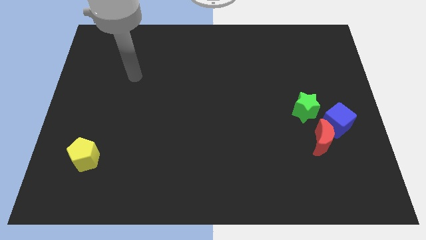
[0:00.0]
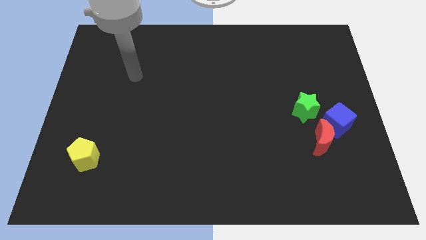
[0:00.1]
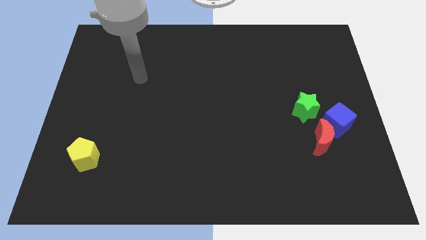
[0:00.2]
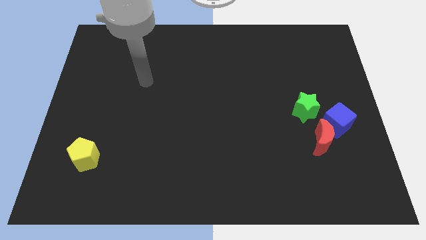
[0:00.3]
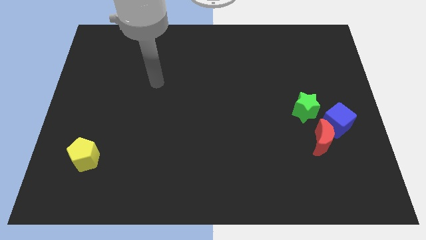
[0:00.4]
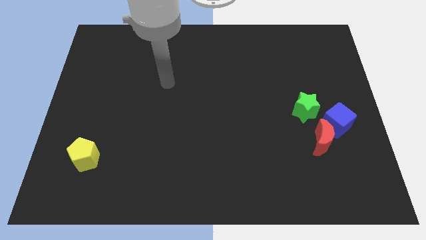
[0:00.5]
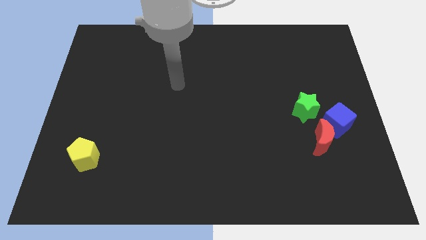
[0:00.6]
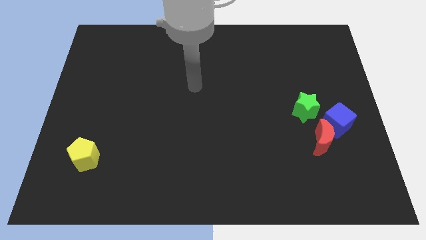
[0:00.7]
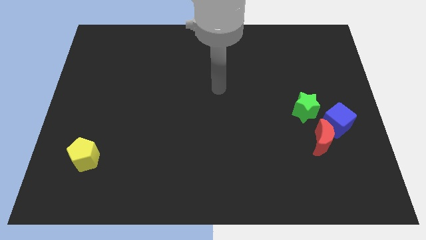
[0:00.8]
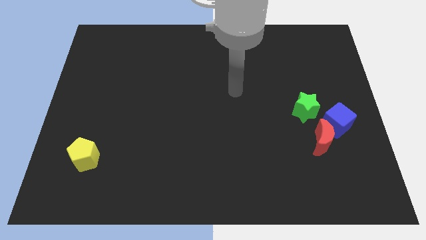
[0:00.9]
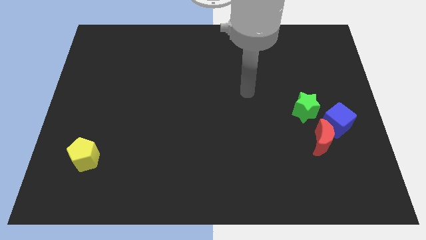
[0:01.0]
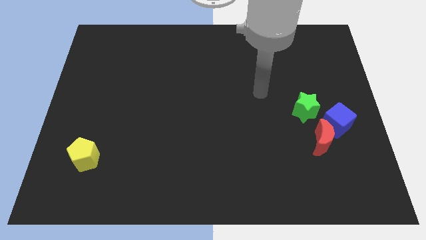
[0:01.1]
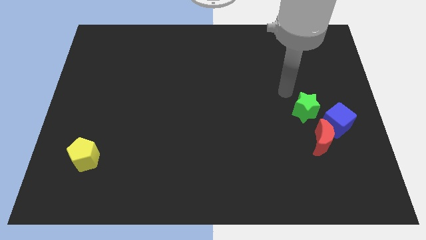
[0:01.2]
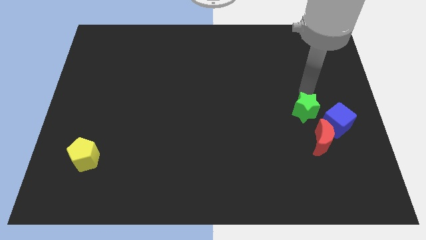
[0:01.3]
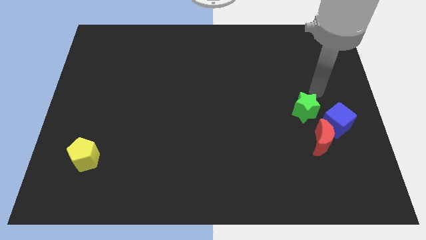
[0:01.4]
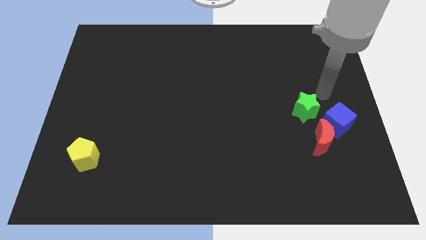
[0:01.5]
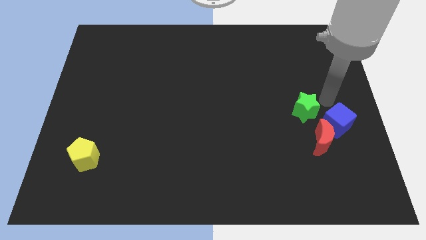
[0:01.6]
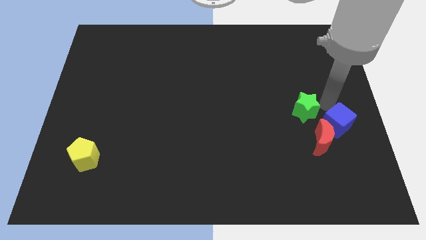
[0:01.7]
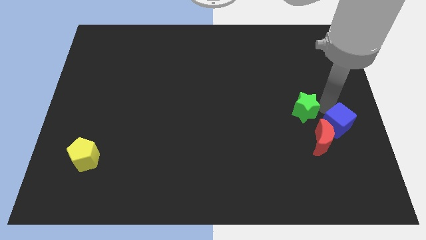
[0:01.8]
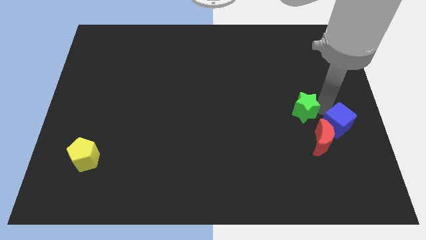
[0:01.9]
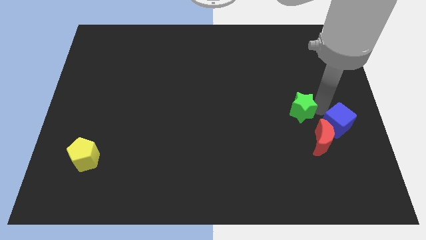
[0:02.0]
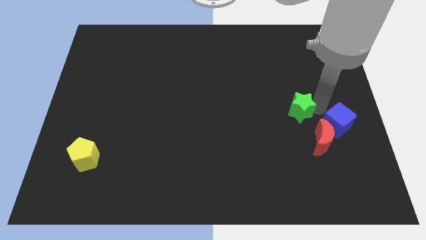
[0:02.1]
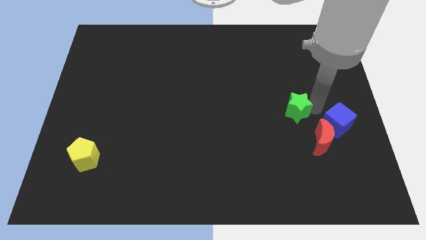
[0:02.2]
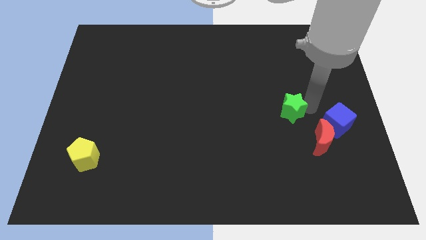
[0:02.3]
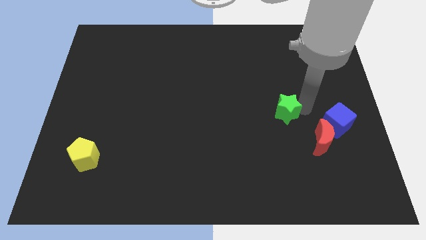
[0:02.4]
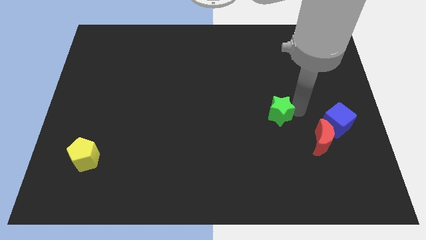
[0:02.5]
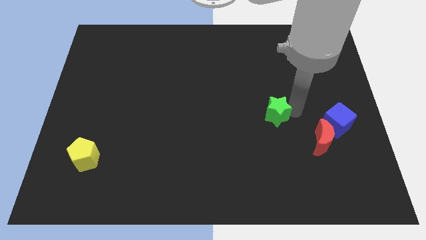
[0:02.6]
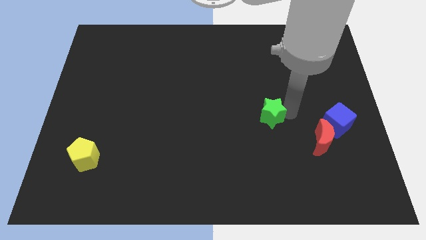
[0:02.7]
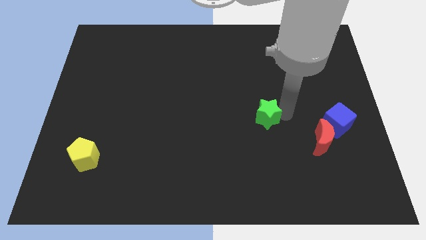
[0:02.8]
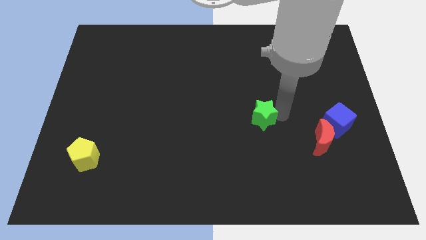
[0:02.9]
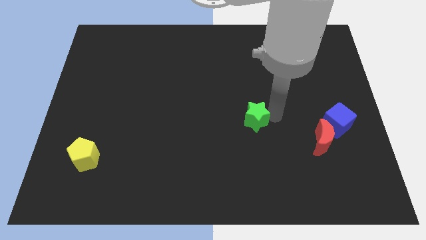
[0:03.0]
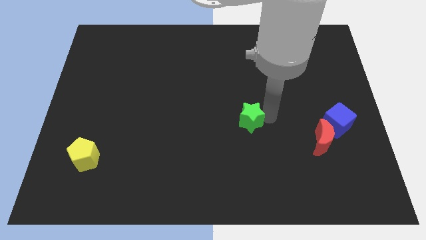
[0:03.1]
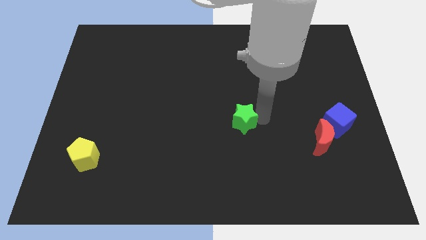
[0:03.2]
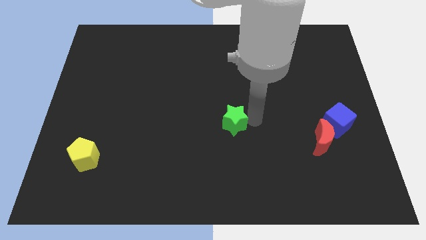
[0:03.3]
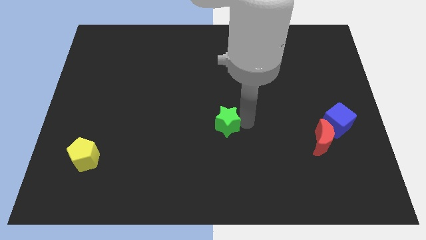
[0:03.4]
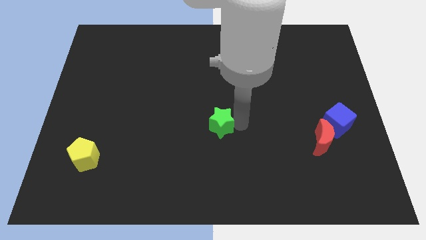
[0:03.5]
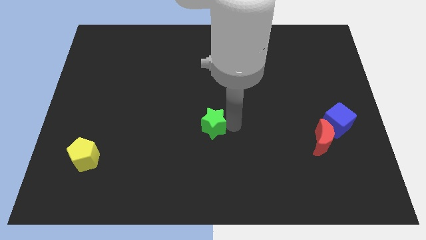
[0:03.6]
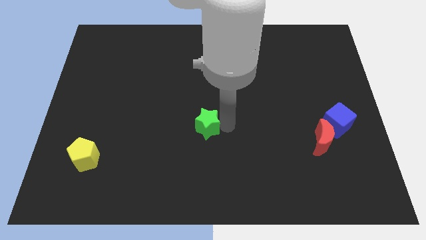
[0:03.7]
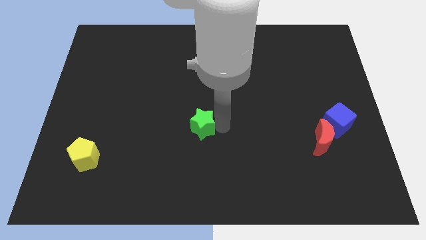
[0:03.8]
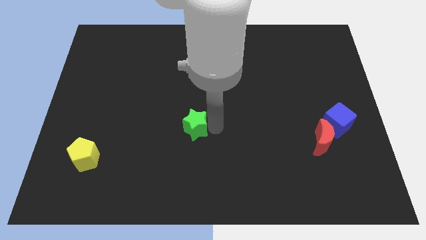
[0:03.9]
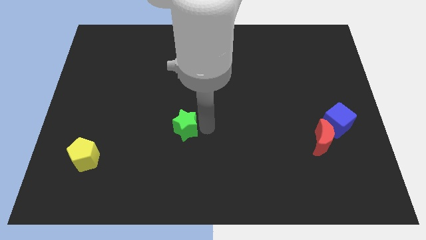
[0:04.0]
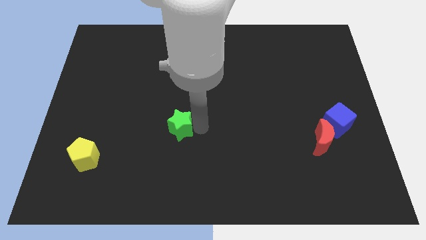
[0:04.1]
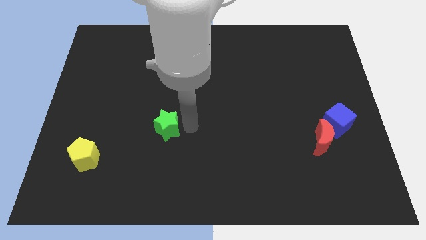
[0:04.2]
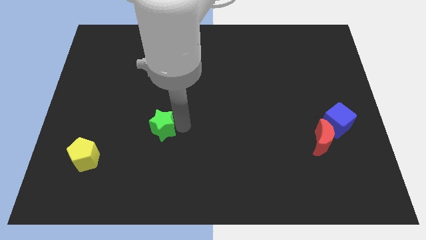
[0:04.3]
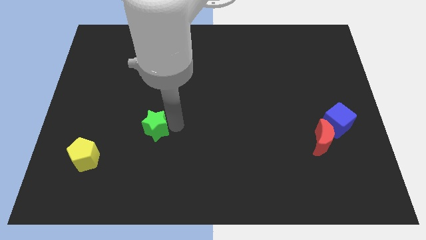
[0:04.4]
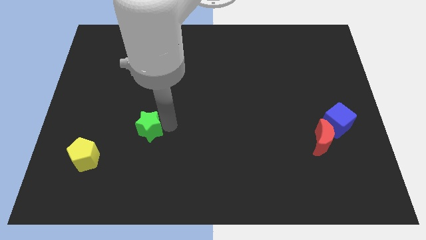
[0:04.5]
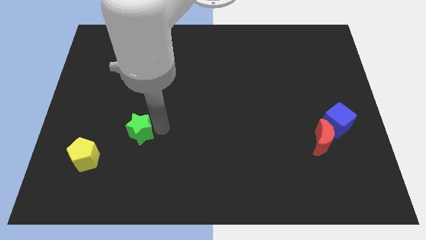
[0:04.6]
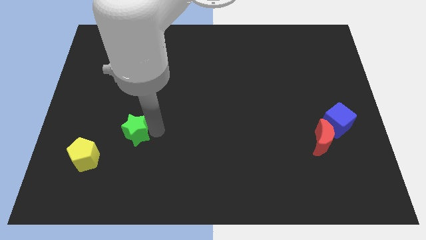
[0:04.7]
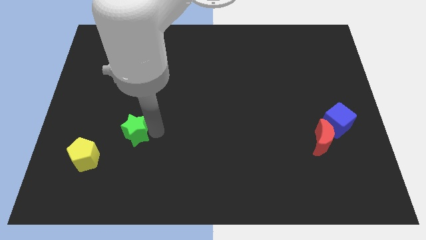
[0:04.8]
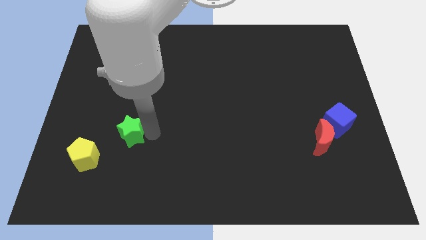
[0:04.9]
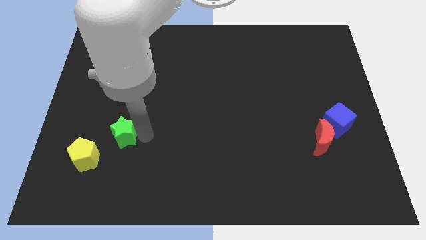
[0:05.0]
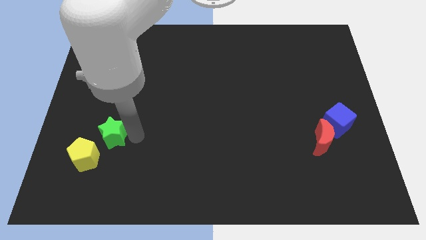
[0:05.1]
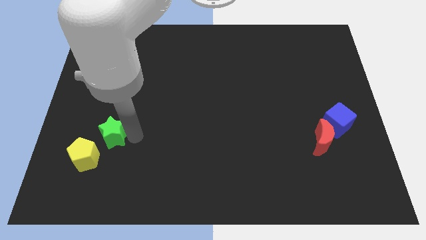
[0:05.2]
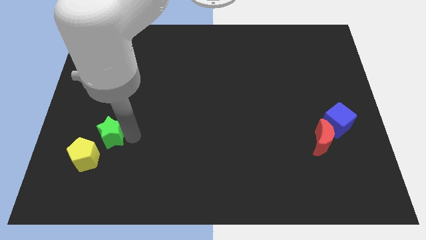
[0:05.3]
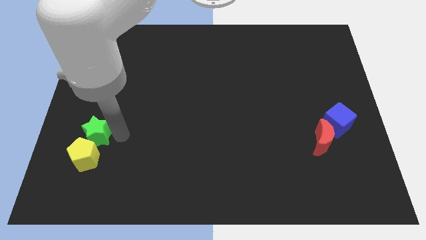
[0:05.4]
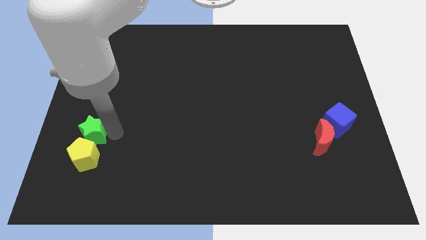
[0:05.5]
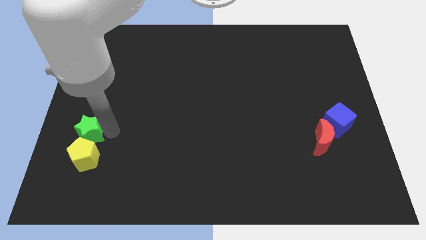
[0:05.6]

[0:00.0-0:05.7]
slide the star close to the pentagon

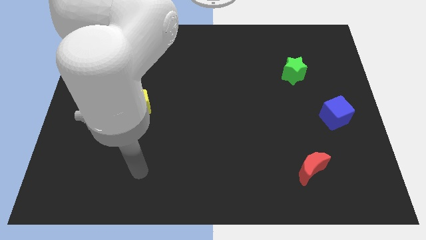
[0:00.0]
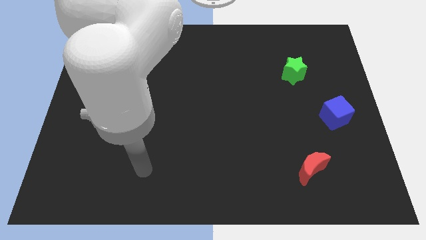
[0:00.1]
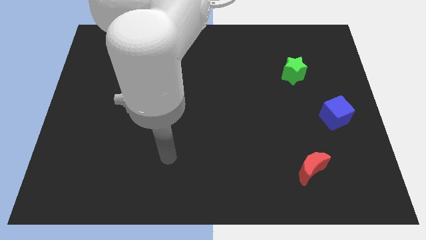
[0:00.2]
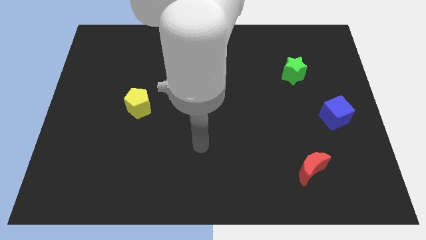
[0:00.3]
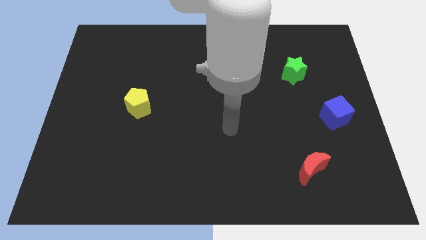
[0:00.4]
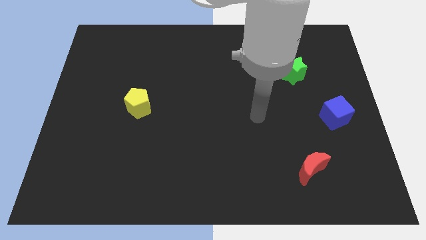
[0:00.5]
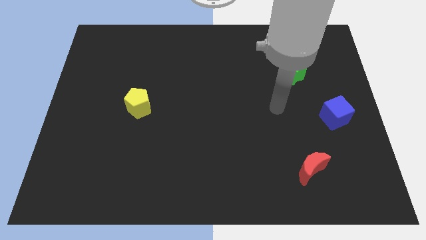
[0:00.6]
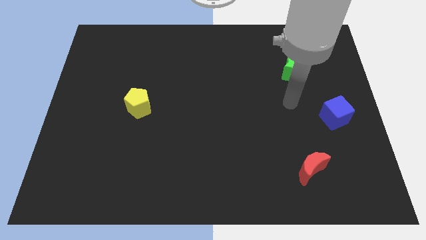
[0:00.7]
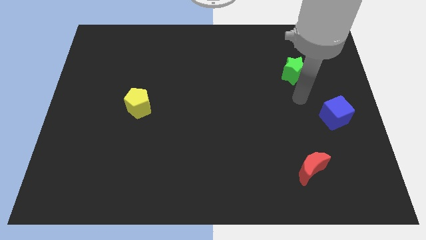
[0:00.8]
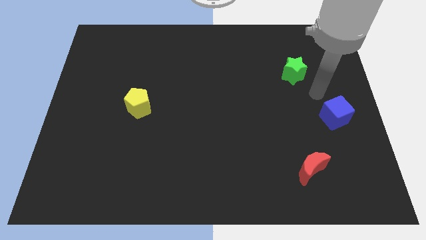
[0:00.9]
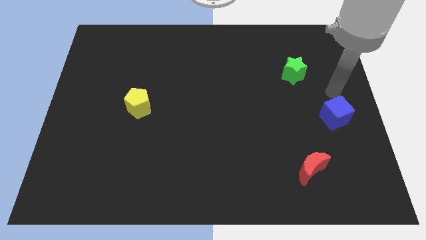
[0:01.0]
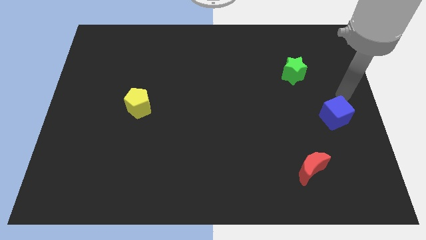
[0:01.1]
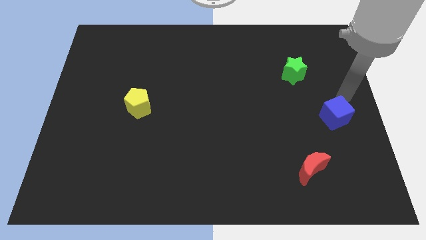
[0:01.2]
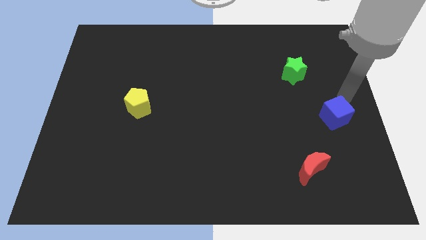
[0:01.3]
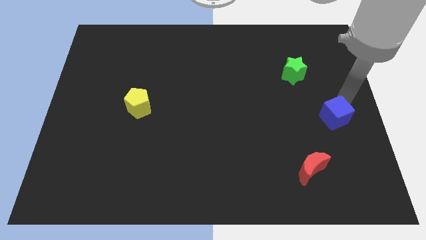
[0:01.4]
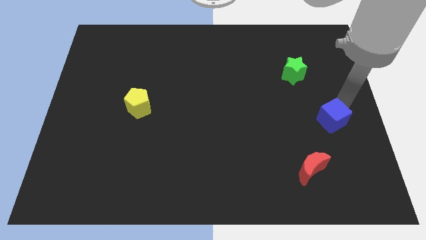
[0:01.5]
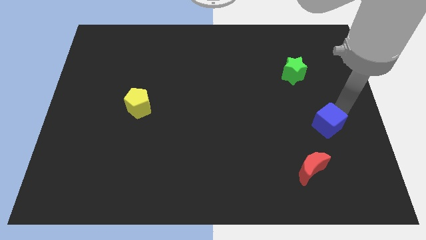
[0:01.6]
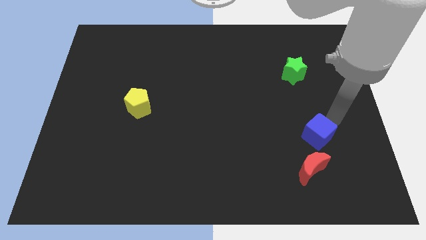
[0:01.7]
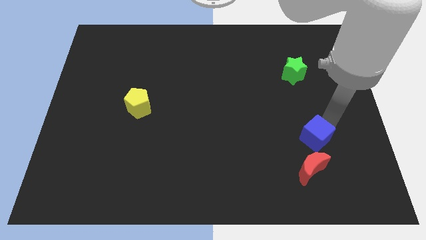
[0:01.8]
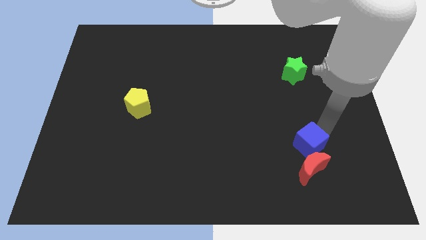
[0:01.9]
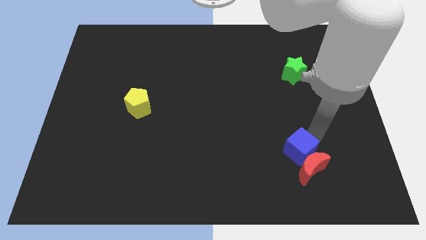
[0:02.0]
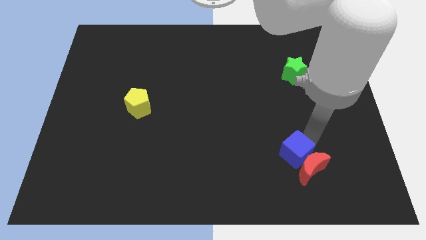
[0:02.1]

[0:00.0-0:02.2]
put the blue cube next to the red moon

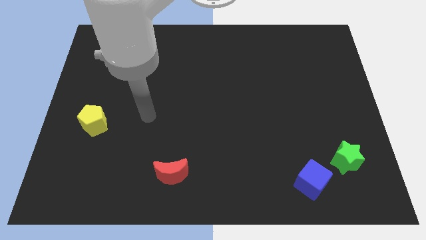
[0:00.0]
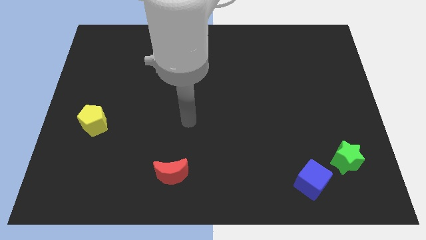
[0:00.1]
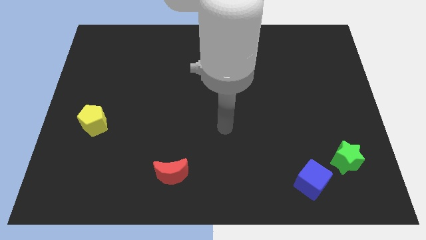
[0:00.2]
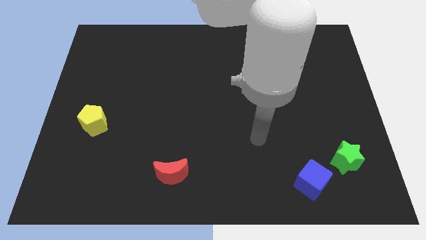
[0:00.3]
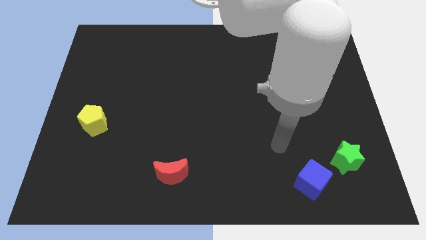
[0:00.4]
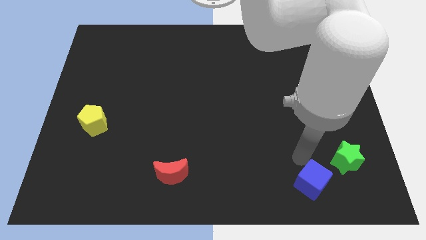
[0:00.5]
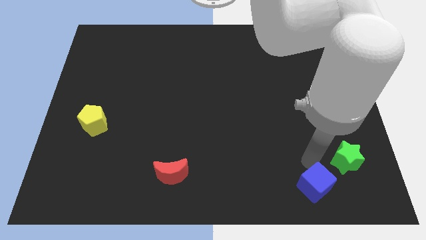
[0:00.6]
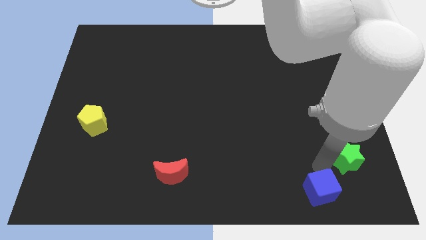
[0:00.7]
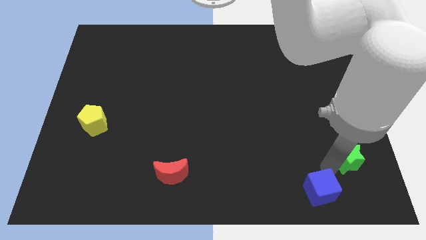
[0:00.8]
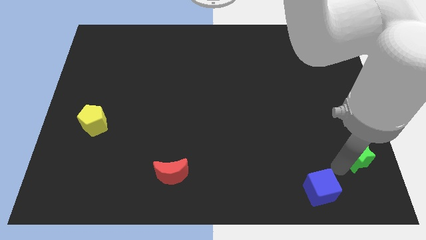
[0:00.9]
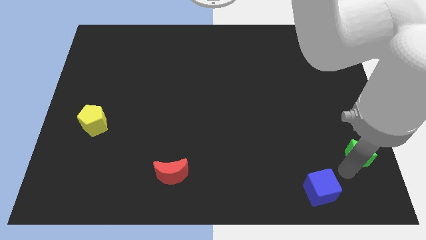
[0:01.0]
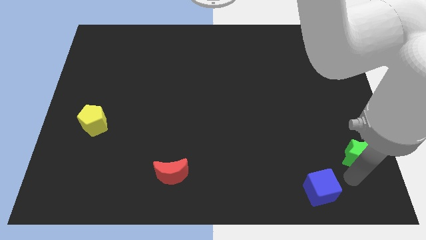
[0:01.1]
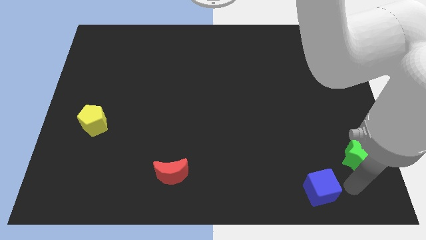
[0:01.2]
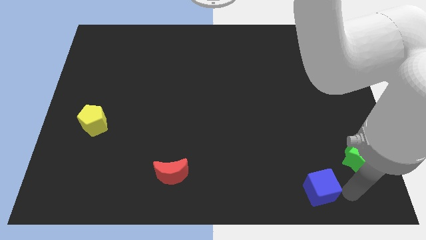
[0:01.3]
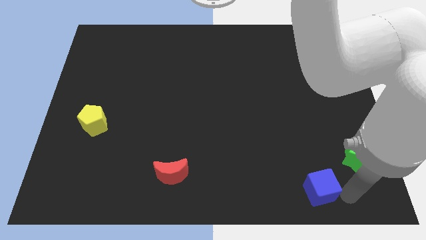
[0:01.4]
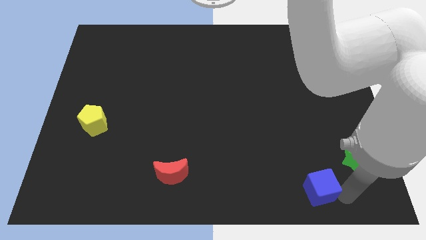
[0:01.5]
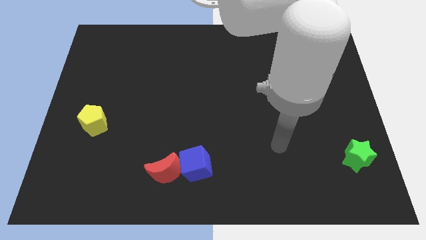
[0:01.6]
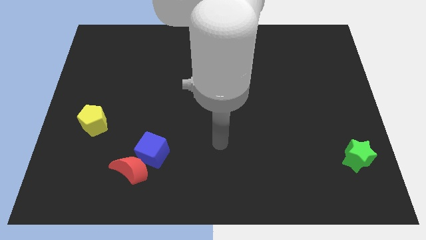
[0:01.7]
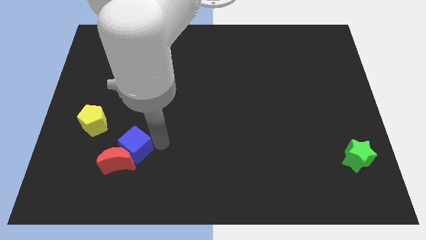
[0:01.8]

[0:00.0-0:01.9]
move the cube close to the moon
